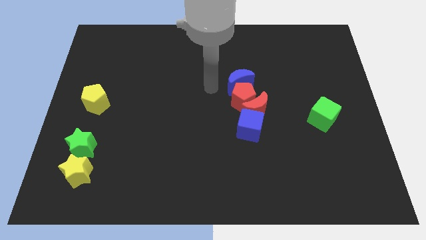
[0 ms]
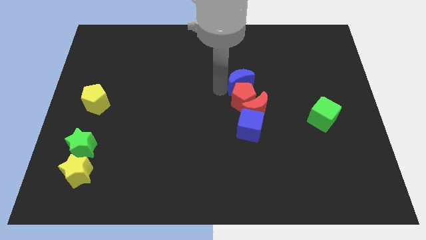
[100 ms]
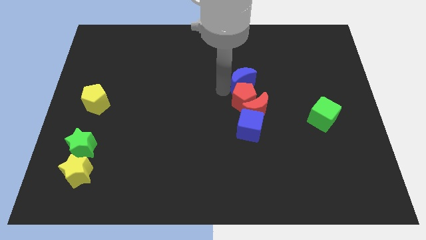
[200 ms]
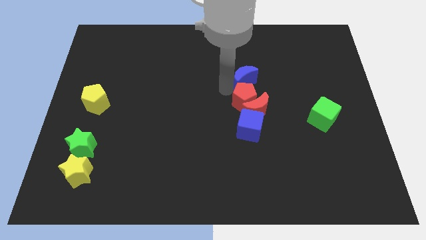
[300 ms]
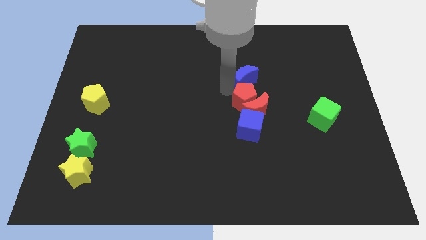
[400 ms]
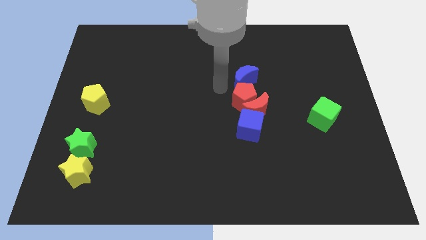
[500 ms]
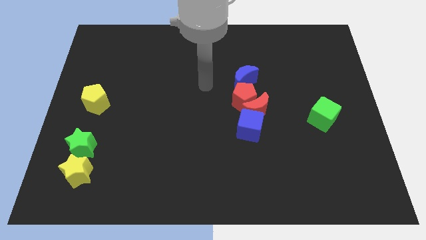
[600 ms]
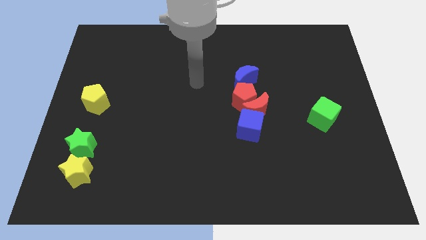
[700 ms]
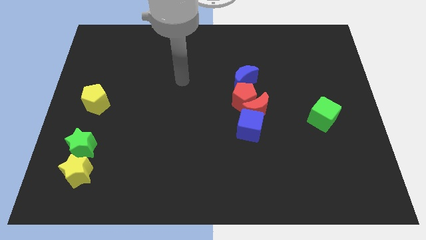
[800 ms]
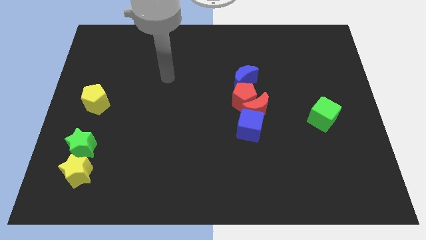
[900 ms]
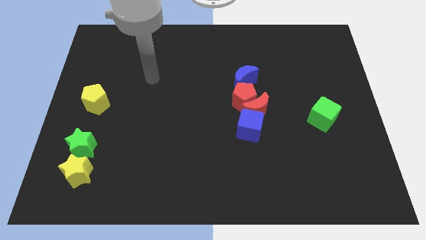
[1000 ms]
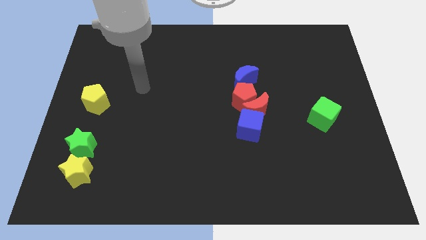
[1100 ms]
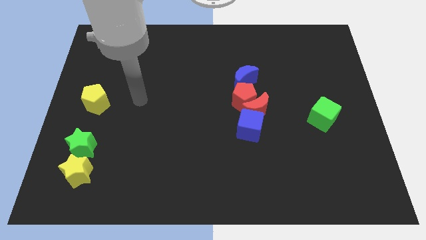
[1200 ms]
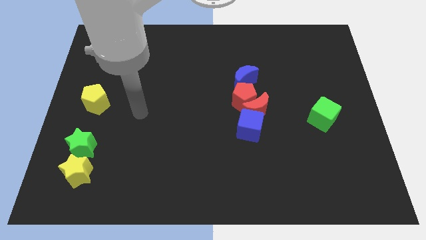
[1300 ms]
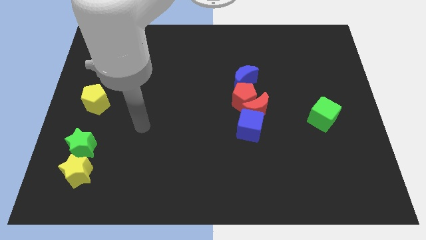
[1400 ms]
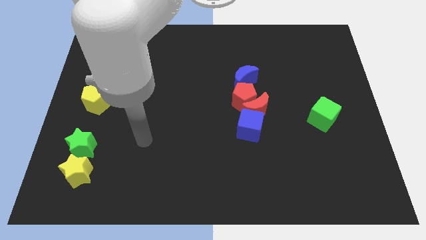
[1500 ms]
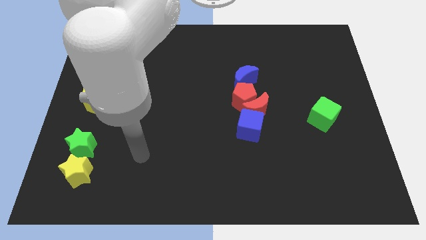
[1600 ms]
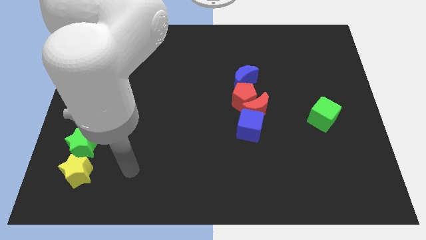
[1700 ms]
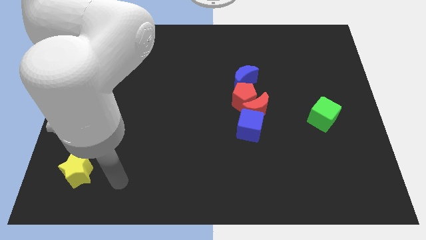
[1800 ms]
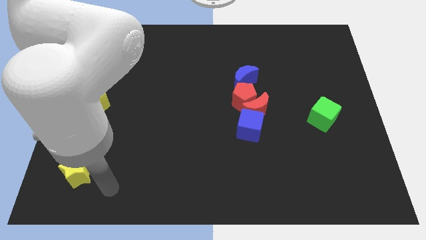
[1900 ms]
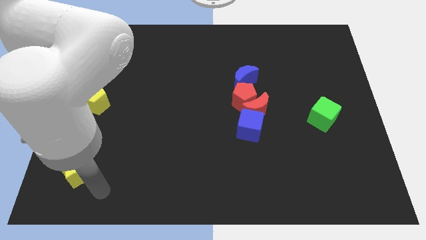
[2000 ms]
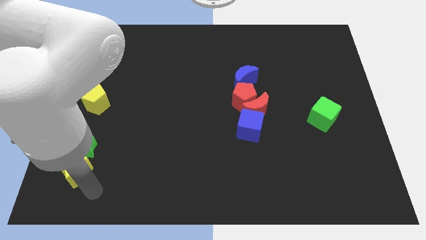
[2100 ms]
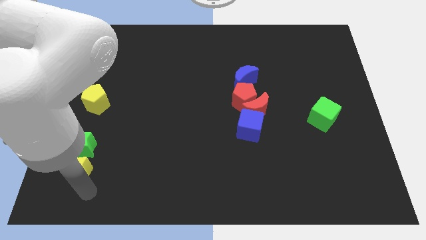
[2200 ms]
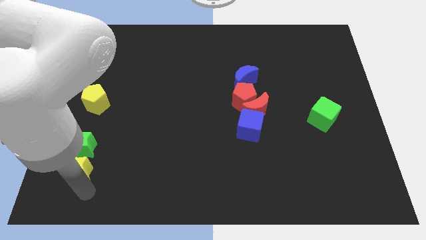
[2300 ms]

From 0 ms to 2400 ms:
move your arm to the bottom of the yellow star

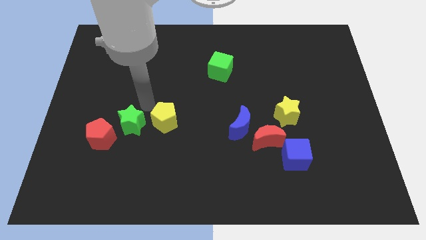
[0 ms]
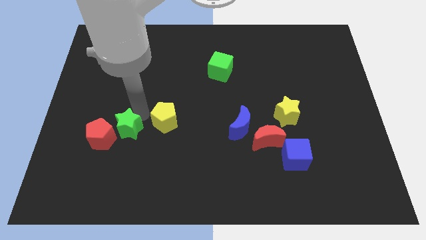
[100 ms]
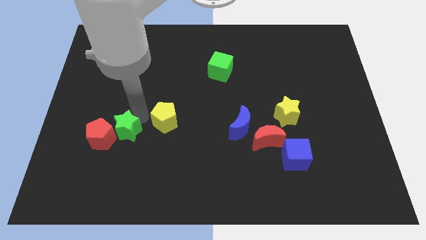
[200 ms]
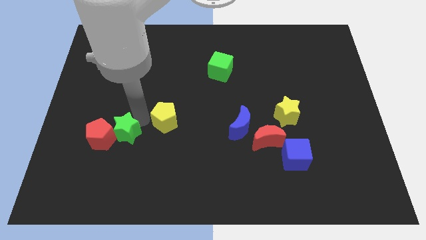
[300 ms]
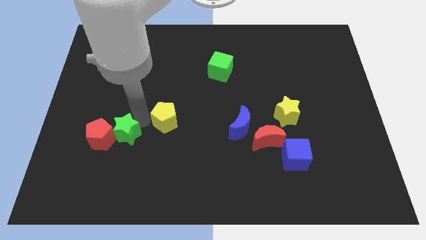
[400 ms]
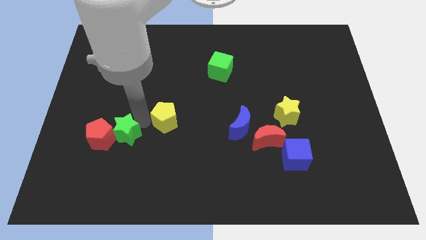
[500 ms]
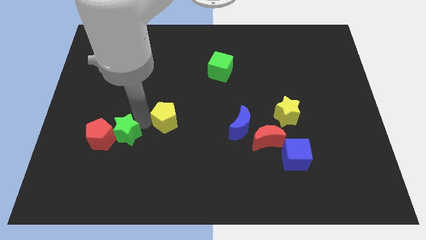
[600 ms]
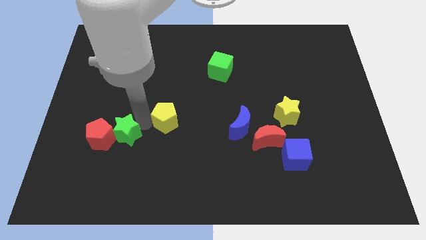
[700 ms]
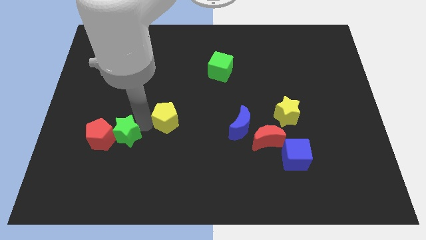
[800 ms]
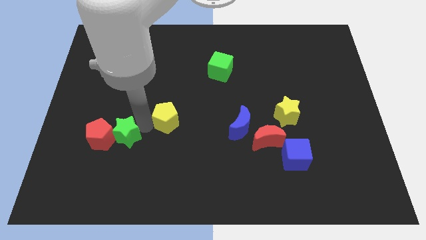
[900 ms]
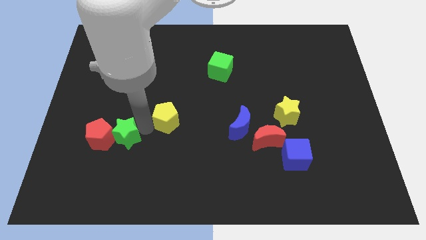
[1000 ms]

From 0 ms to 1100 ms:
place your arm in between the green star and yellow pentagon

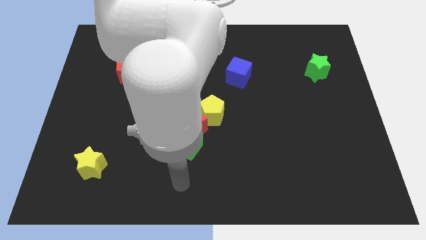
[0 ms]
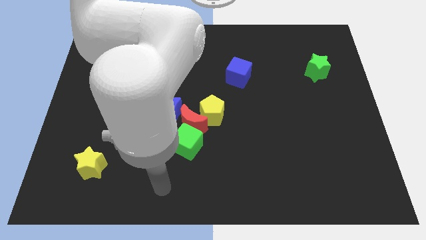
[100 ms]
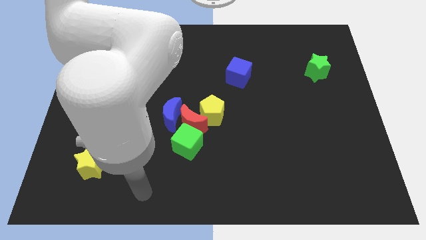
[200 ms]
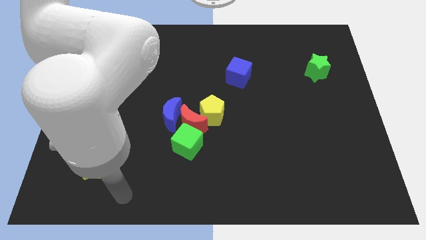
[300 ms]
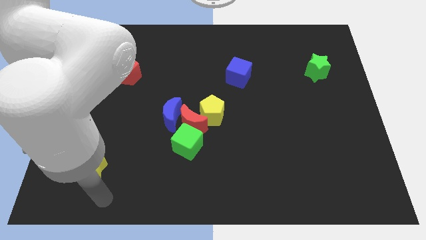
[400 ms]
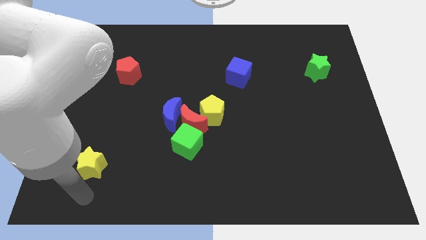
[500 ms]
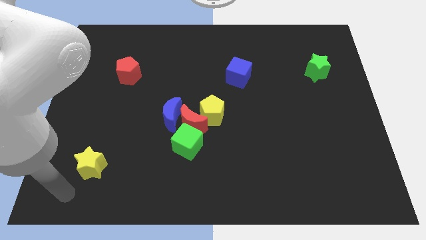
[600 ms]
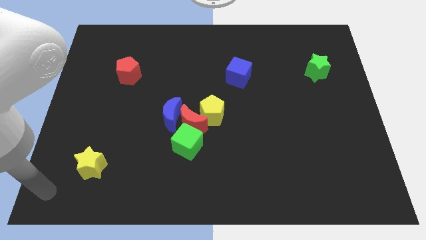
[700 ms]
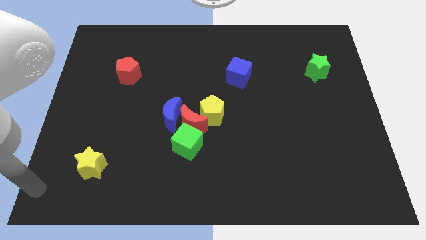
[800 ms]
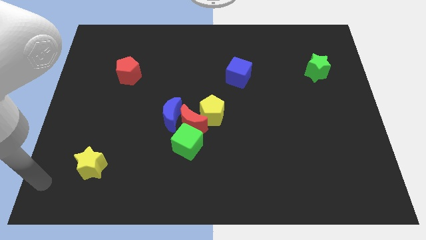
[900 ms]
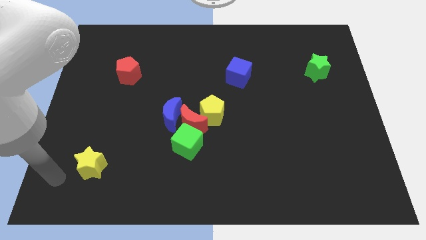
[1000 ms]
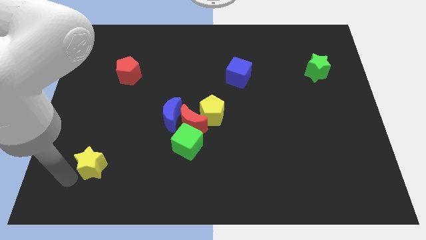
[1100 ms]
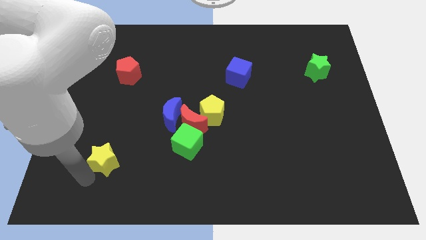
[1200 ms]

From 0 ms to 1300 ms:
move your arm towards the yellow star

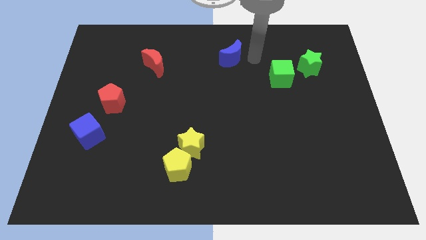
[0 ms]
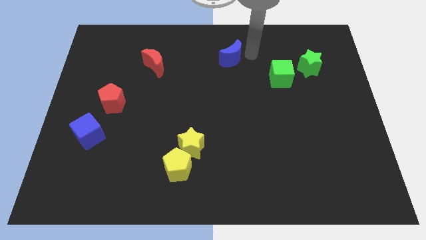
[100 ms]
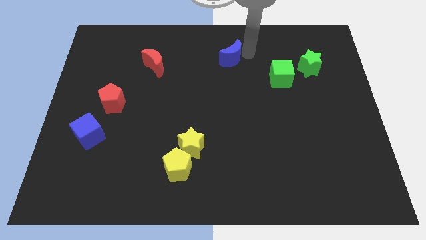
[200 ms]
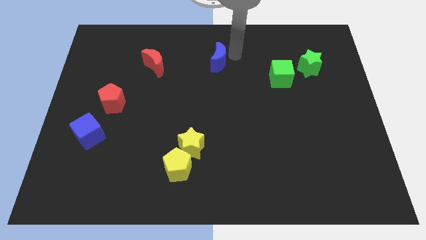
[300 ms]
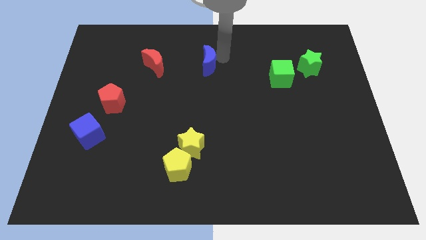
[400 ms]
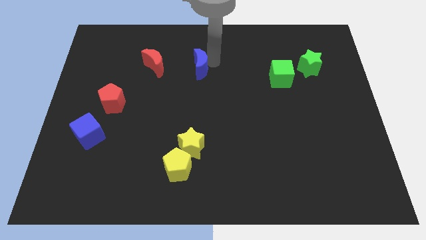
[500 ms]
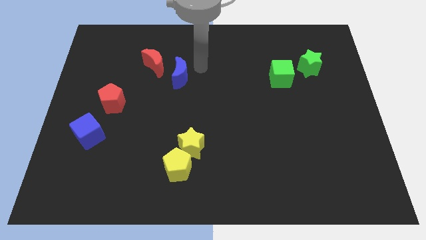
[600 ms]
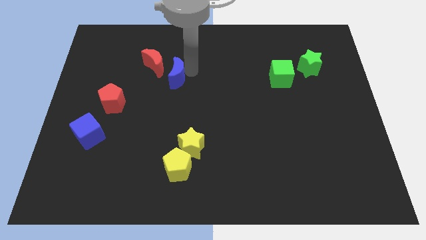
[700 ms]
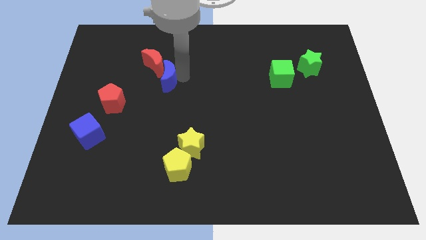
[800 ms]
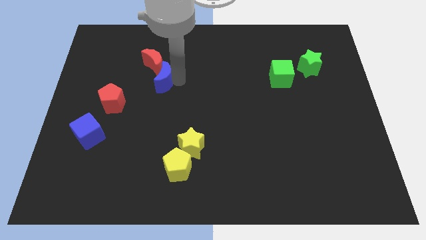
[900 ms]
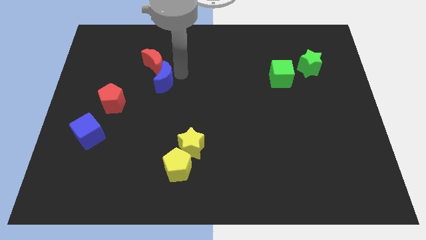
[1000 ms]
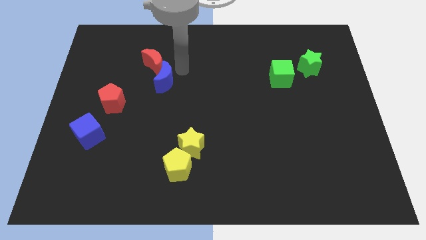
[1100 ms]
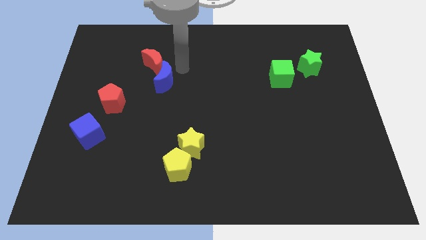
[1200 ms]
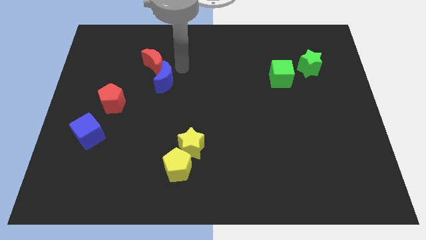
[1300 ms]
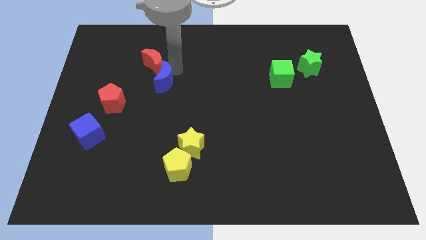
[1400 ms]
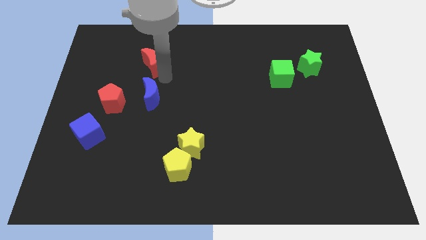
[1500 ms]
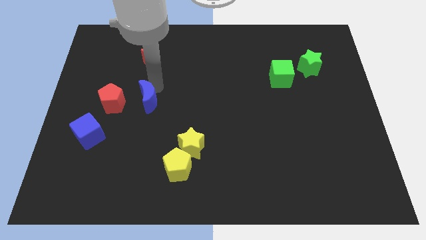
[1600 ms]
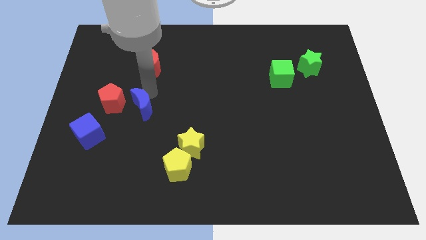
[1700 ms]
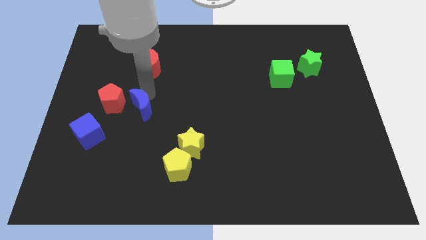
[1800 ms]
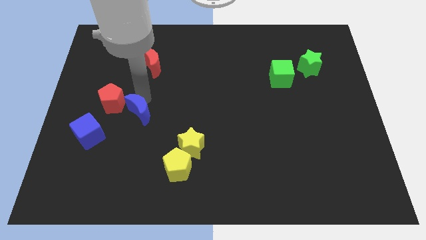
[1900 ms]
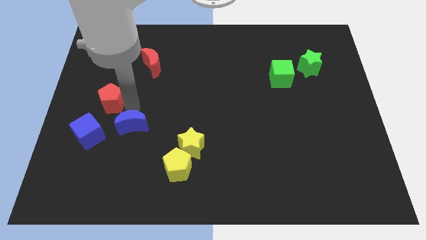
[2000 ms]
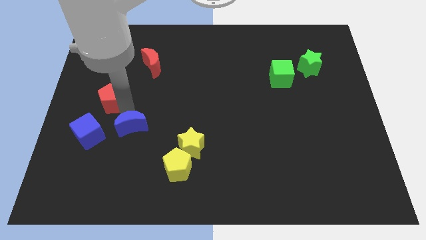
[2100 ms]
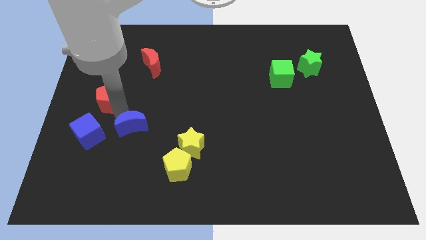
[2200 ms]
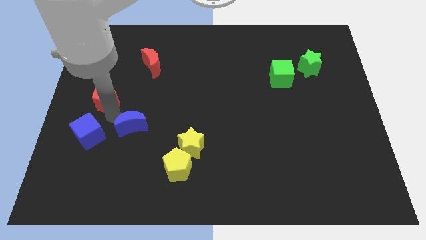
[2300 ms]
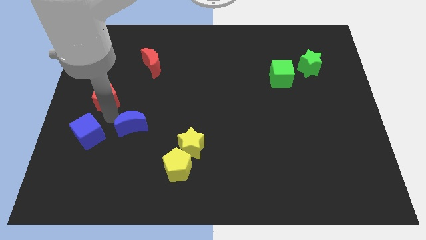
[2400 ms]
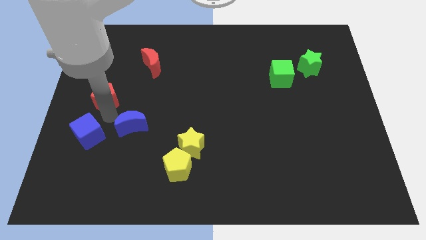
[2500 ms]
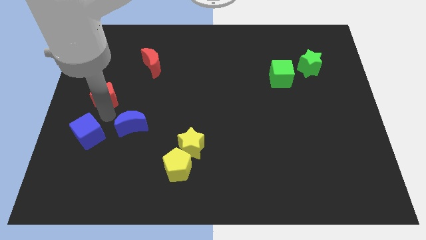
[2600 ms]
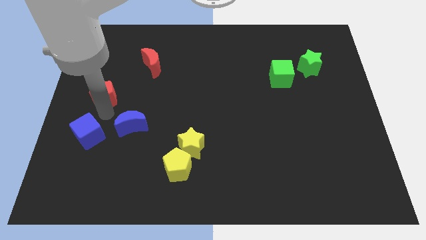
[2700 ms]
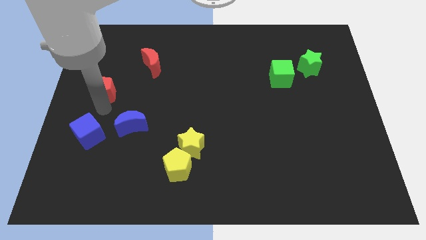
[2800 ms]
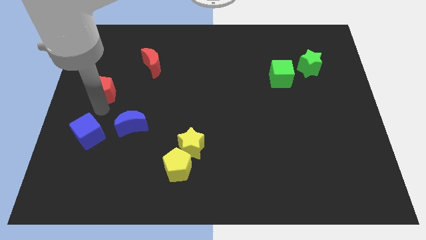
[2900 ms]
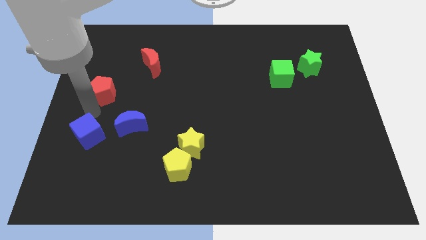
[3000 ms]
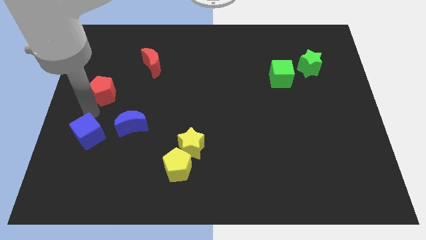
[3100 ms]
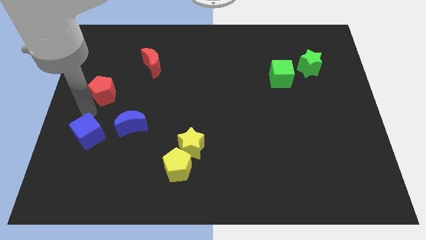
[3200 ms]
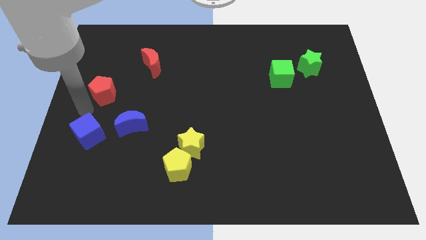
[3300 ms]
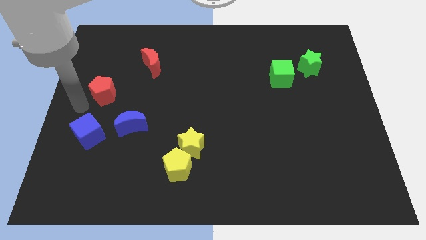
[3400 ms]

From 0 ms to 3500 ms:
slightly move the blue moon close to the blue cube

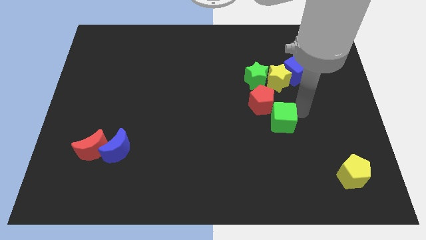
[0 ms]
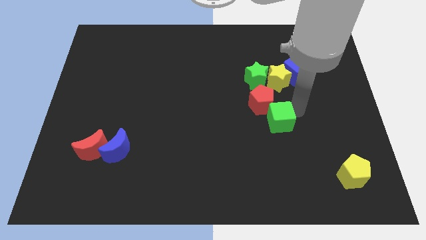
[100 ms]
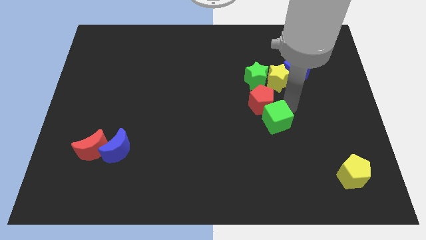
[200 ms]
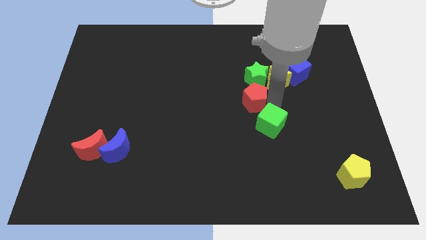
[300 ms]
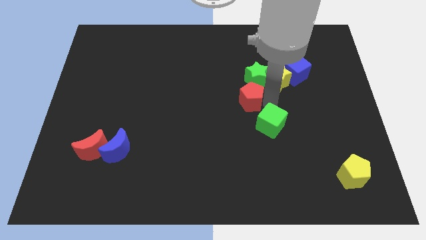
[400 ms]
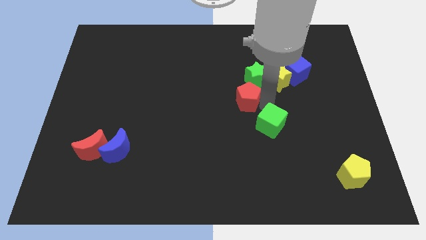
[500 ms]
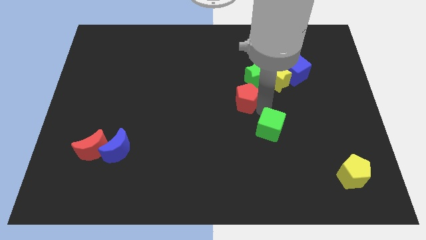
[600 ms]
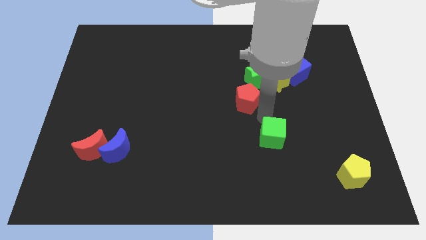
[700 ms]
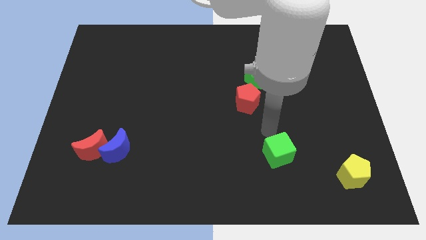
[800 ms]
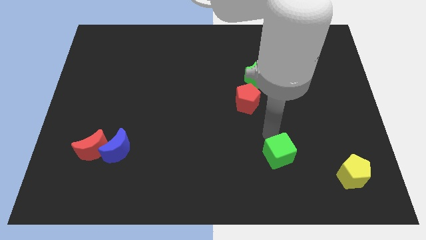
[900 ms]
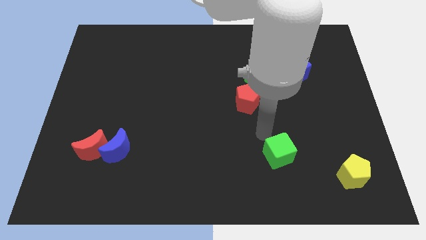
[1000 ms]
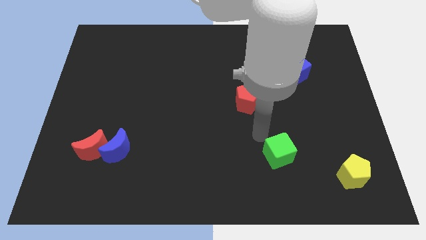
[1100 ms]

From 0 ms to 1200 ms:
separate the green cube from red pentagon
